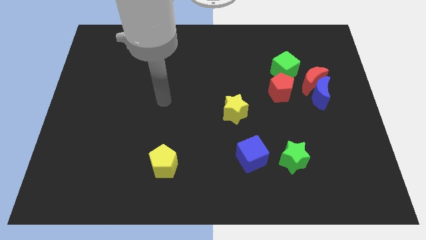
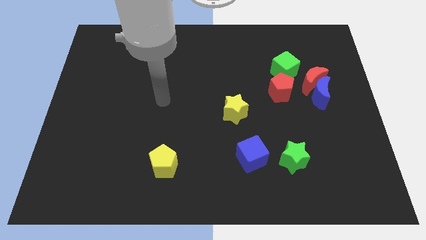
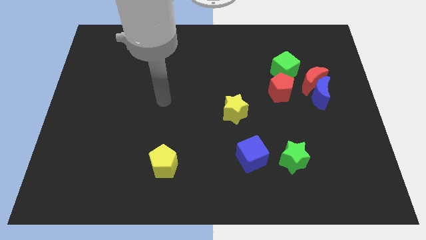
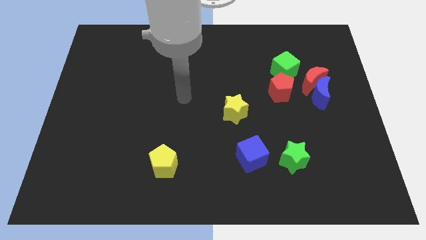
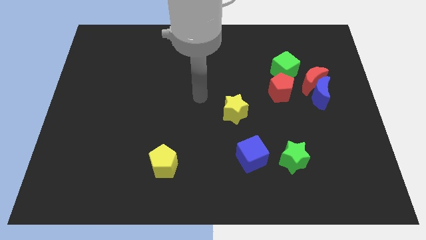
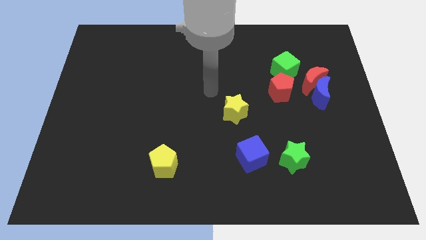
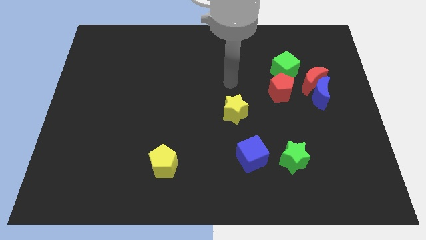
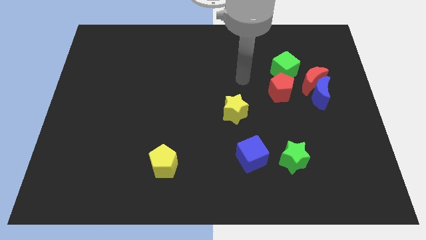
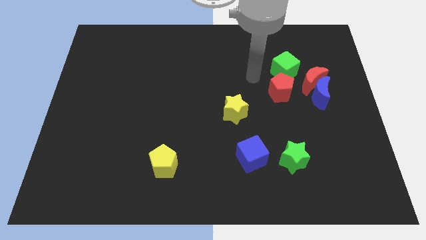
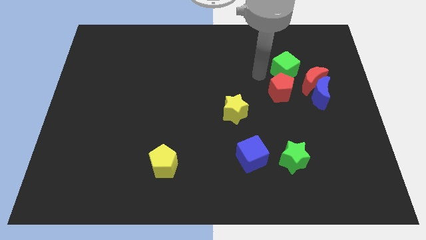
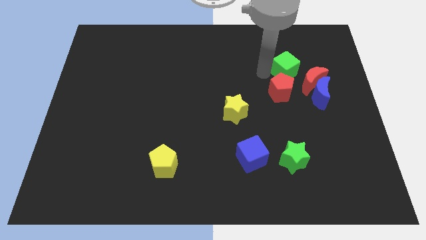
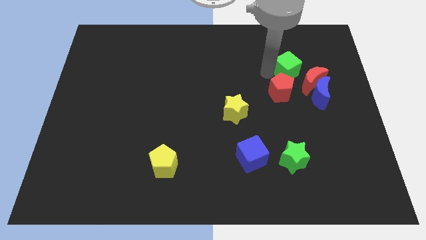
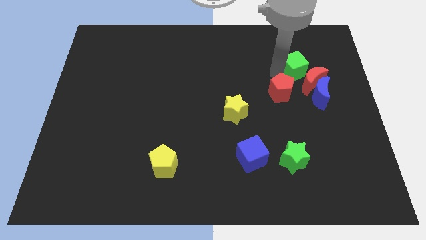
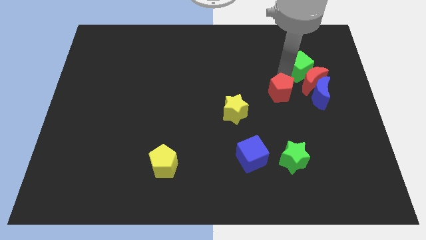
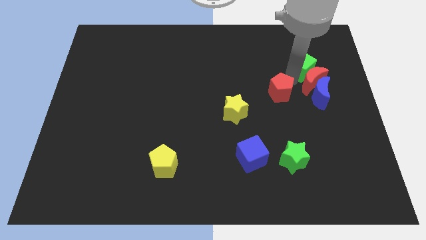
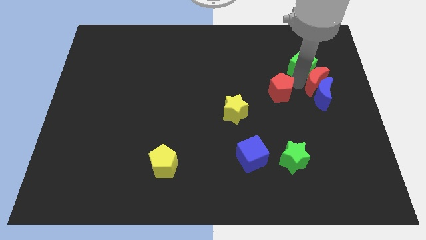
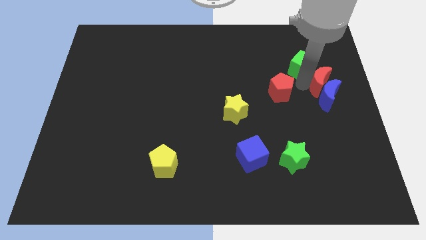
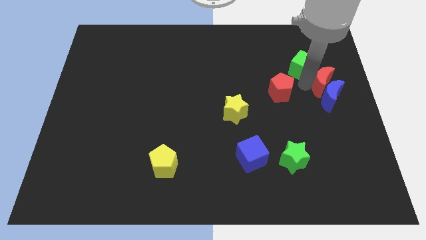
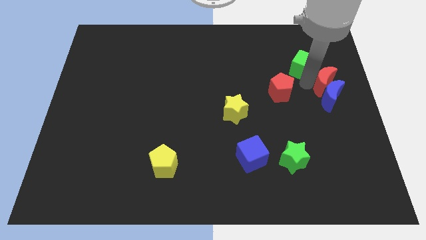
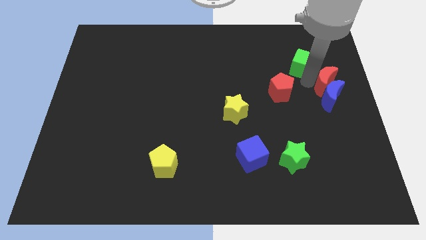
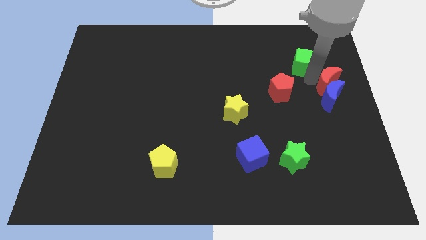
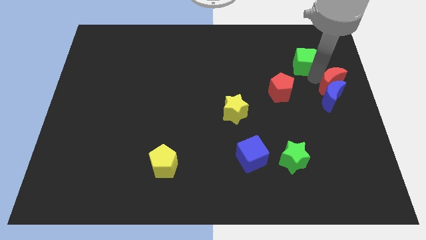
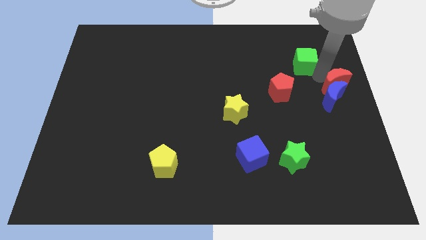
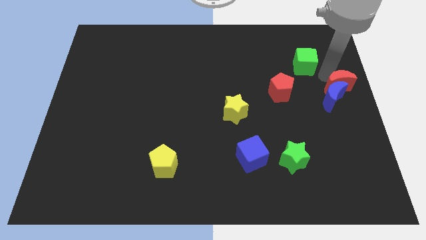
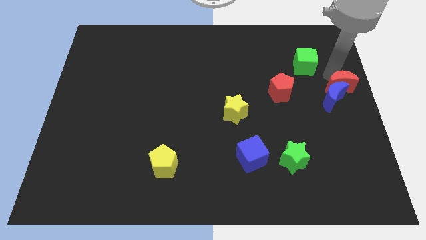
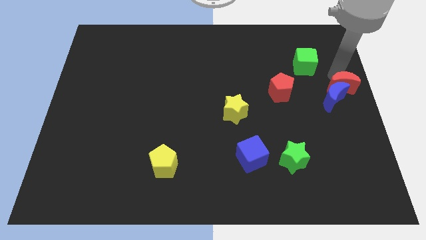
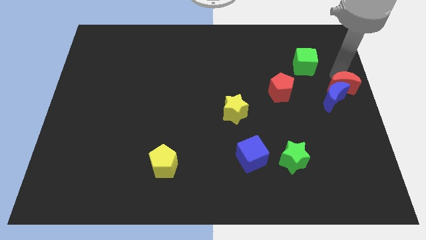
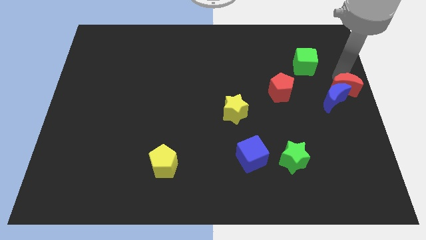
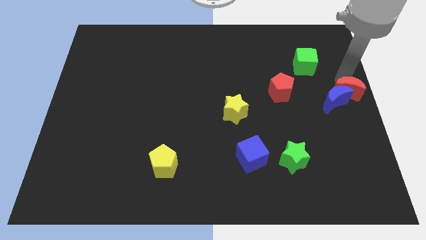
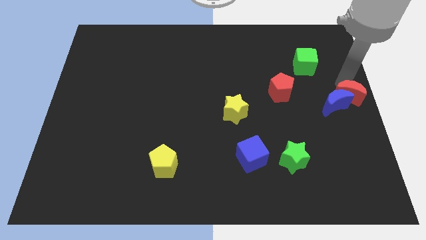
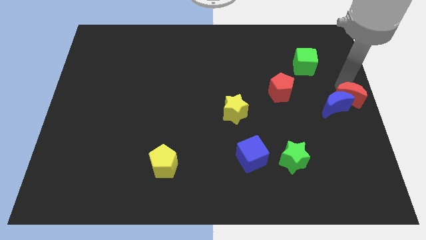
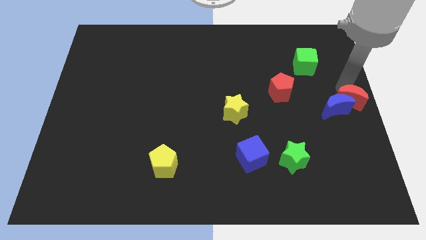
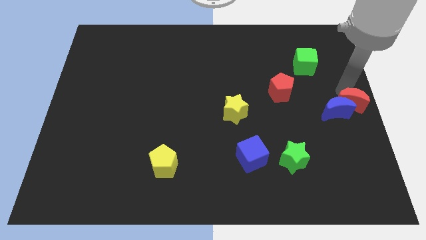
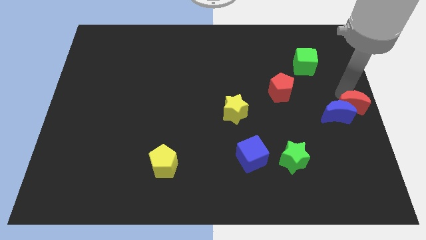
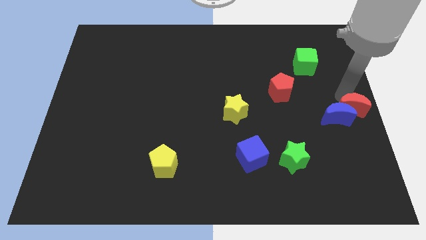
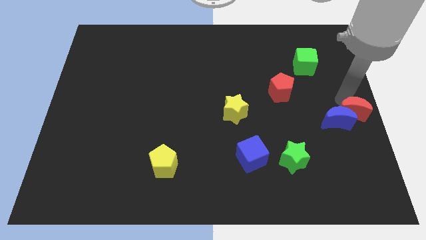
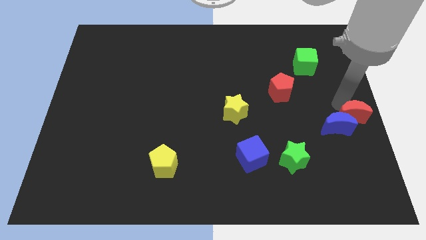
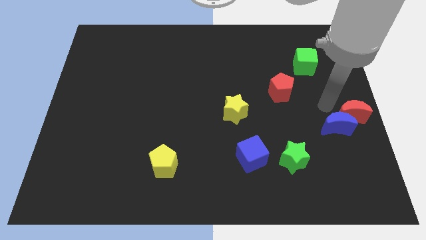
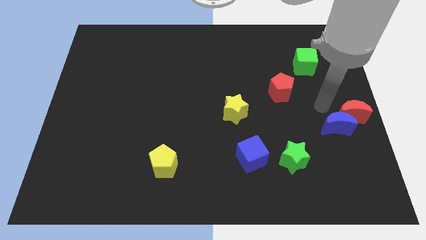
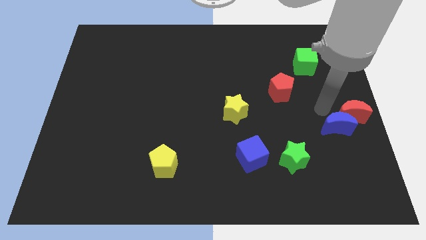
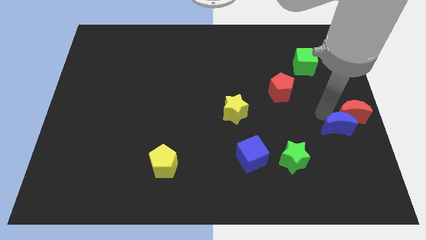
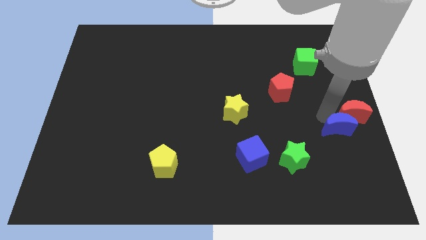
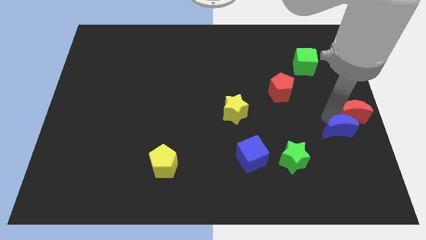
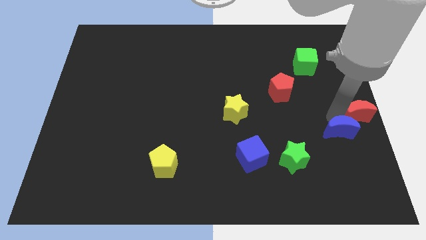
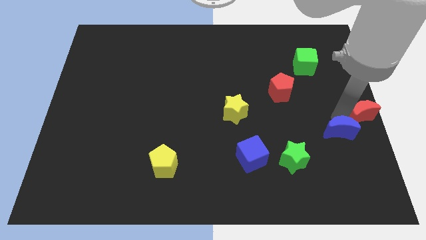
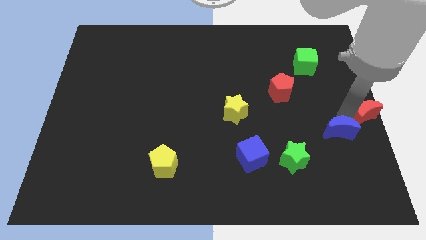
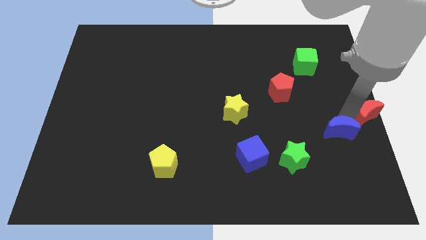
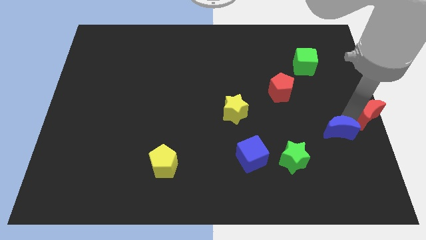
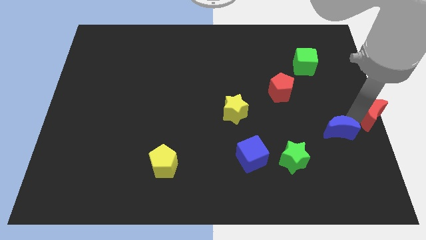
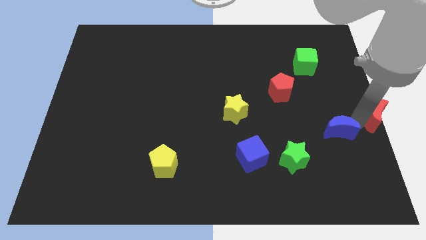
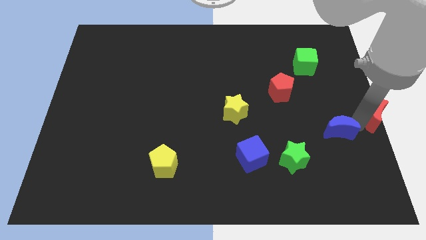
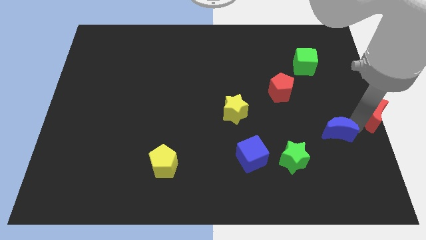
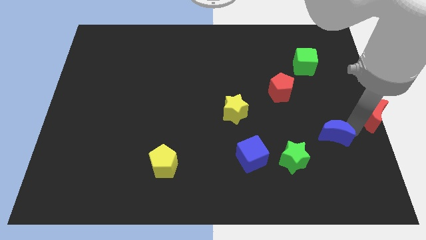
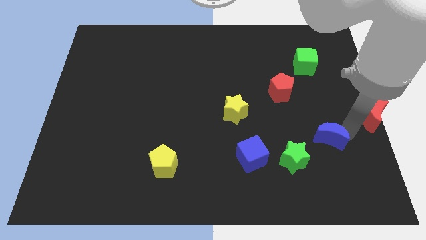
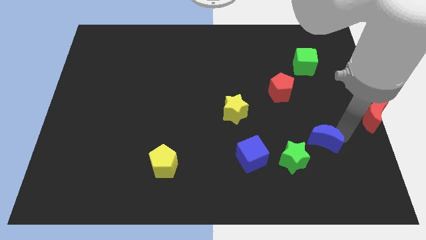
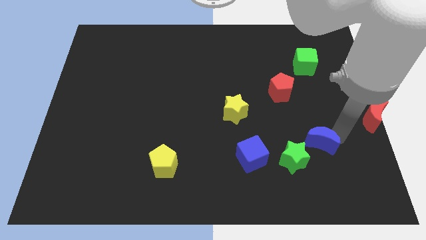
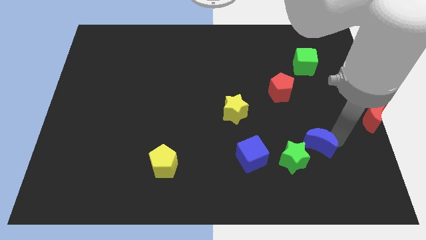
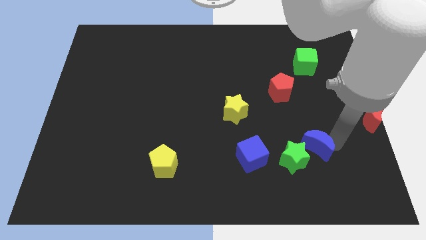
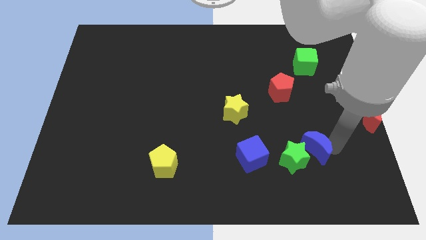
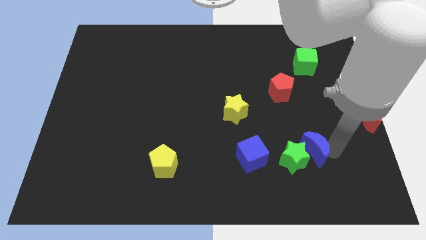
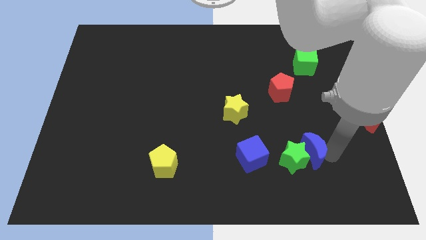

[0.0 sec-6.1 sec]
slide the blue moon next to the green star

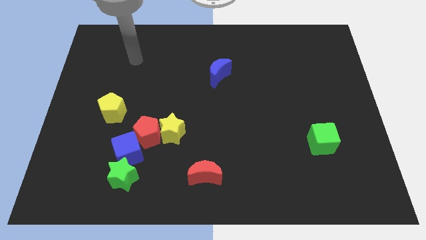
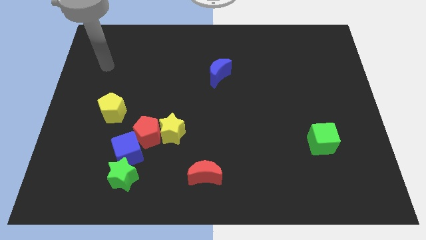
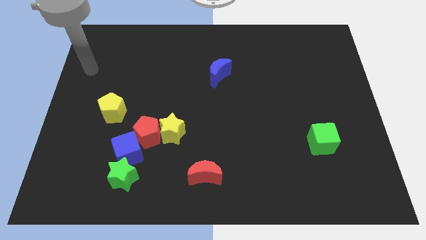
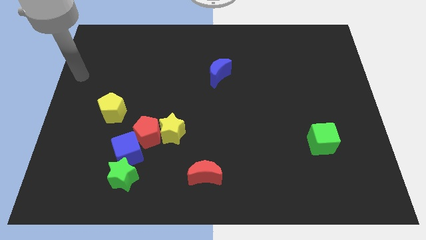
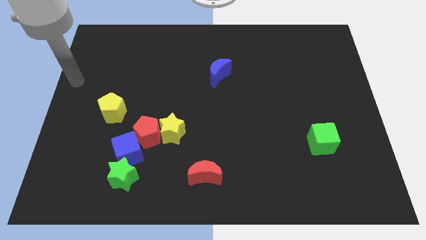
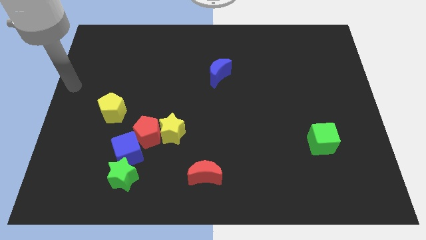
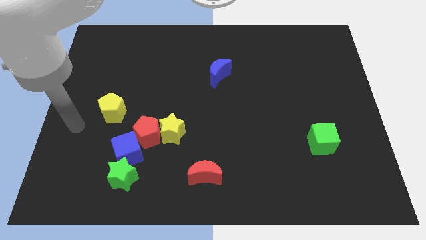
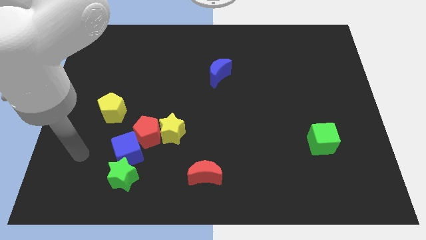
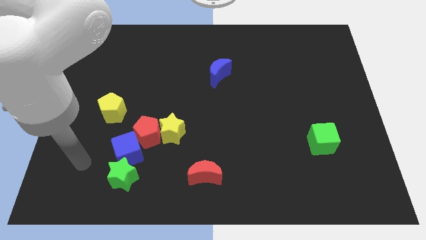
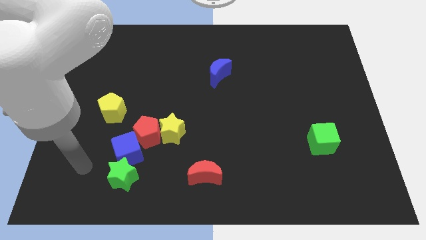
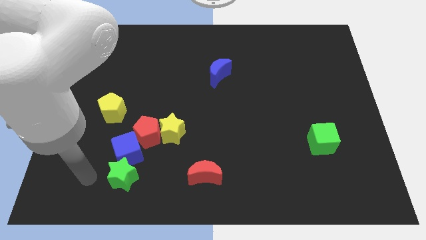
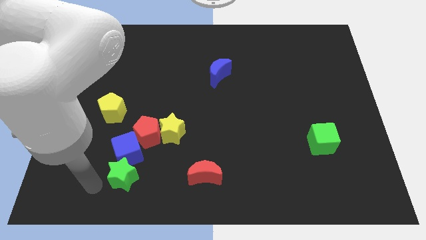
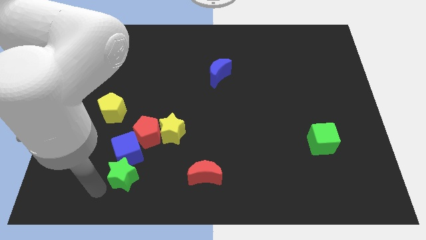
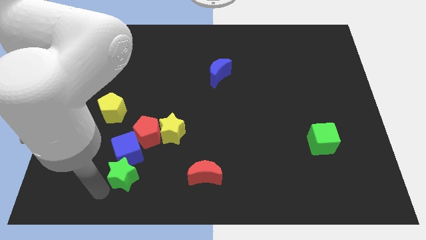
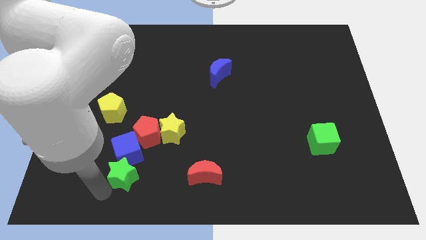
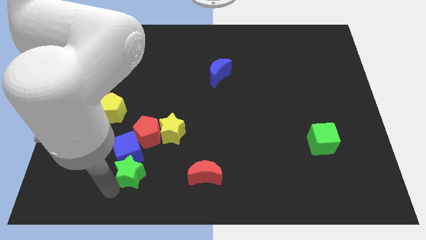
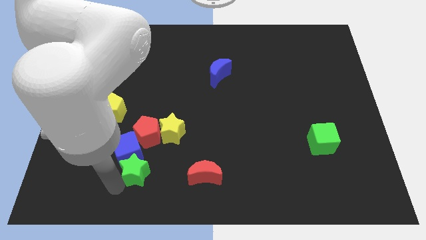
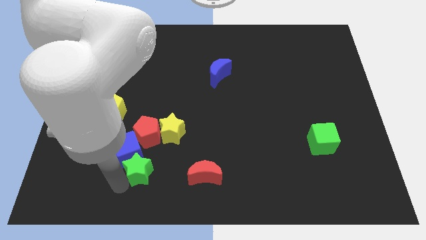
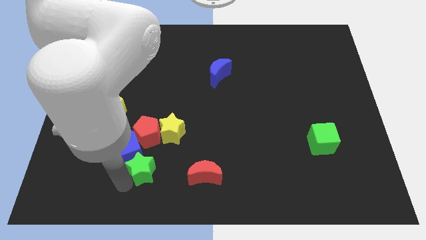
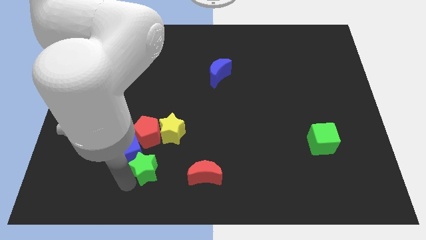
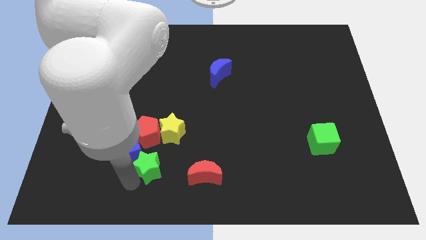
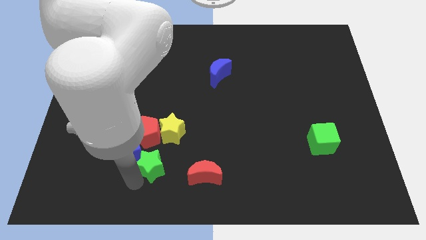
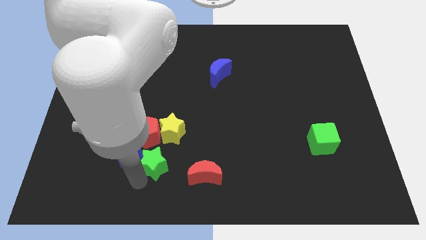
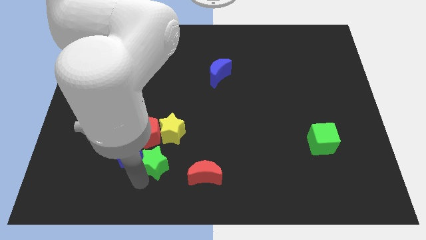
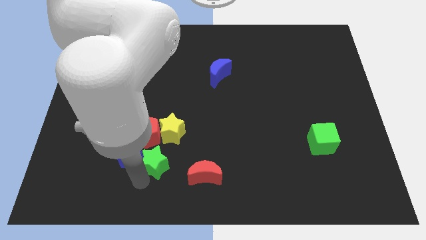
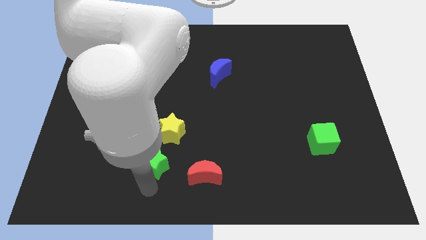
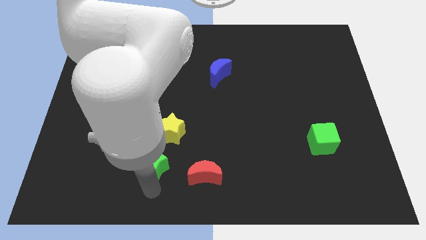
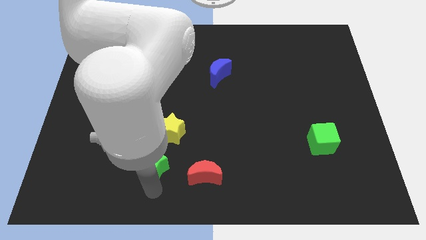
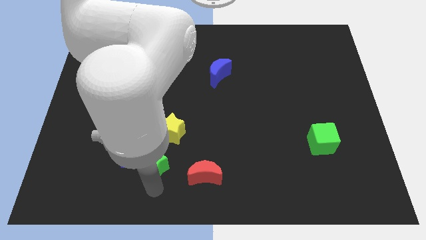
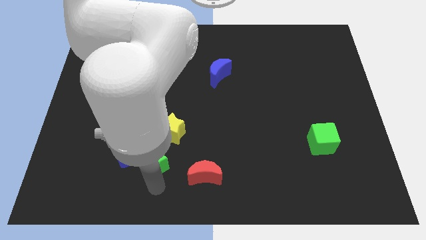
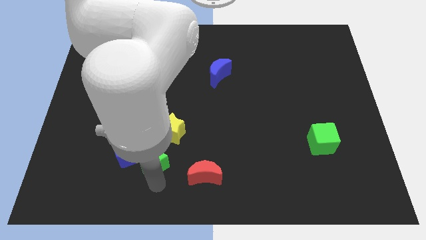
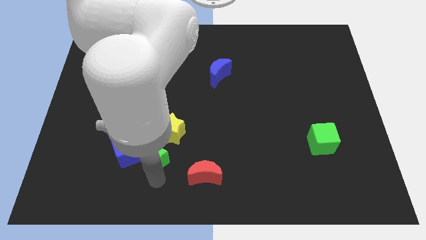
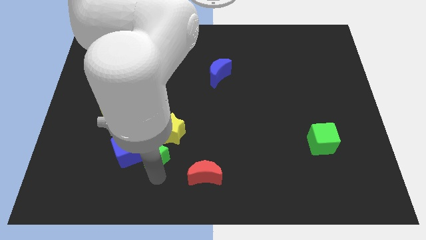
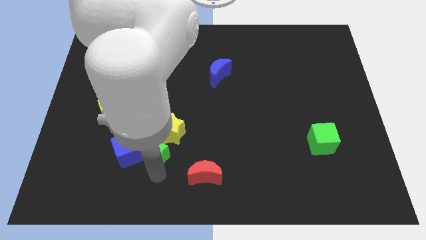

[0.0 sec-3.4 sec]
slide the green star close to the red pentagon
